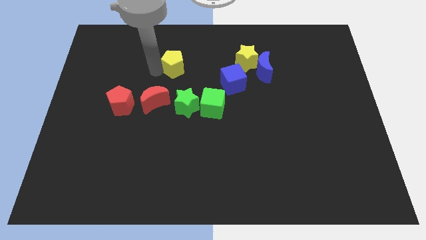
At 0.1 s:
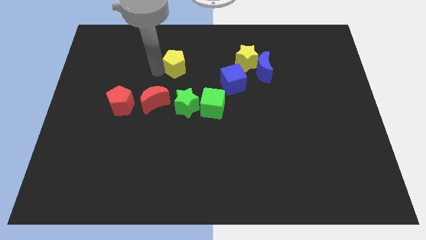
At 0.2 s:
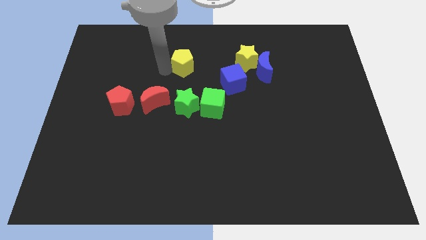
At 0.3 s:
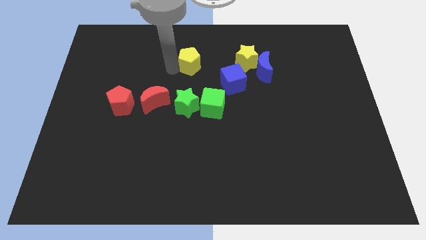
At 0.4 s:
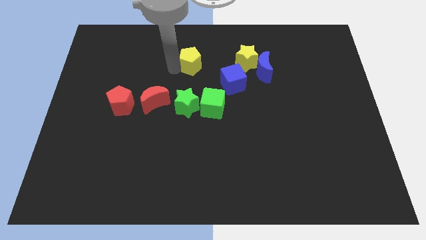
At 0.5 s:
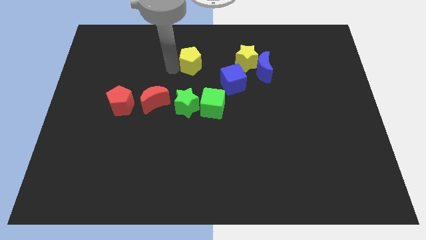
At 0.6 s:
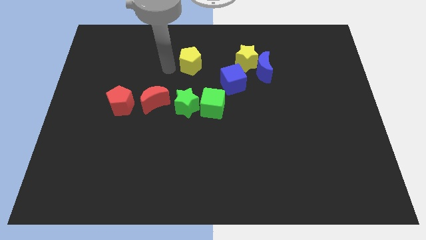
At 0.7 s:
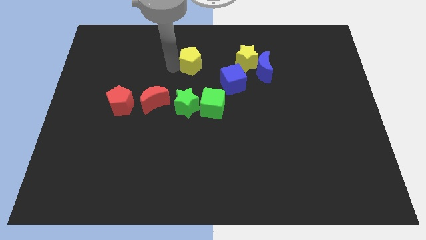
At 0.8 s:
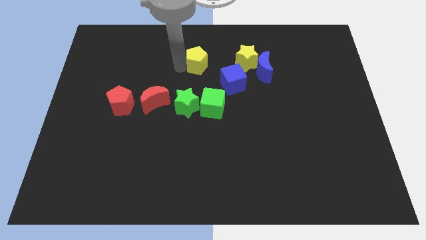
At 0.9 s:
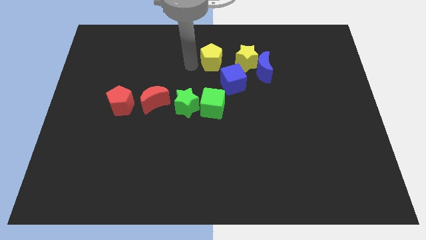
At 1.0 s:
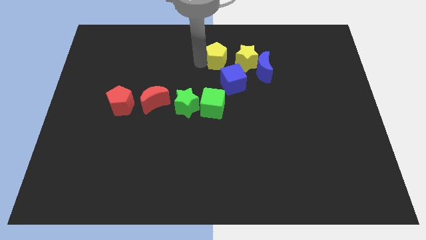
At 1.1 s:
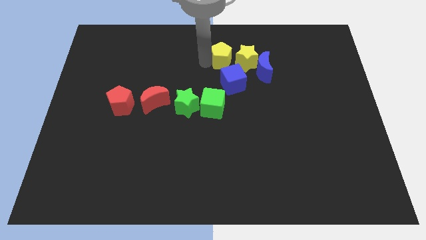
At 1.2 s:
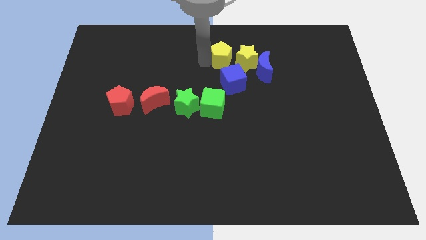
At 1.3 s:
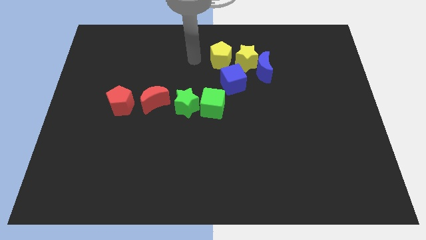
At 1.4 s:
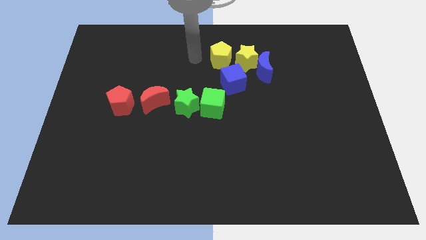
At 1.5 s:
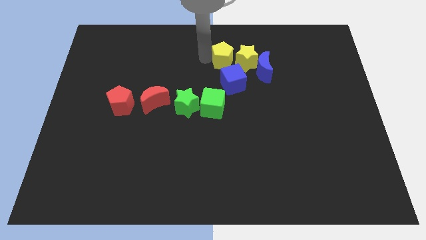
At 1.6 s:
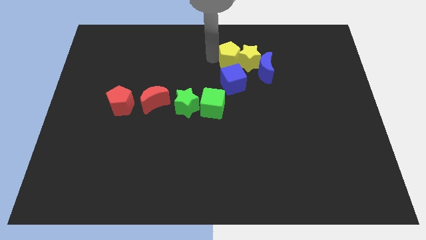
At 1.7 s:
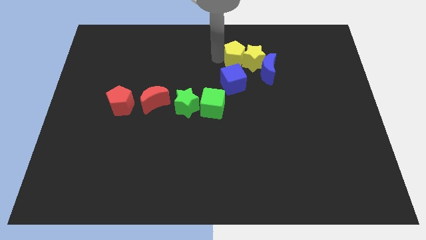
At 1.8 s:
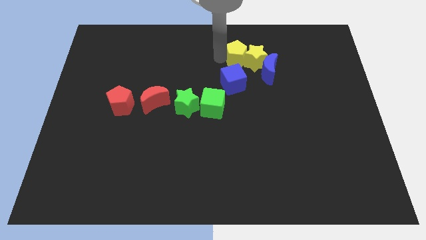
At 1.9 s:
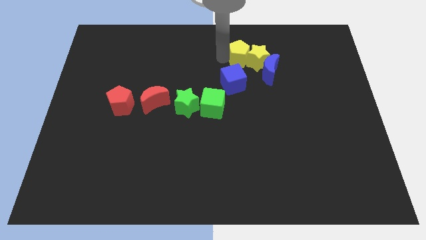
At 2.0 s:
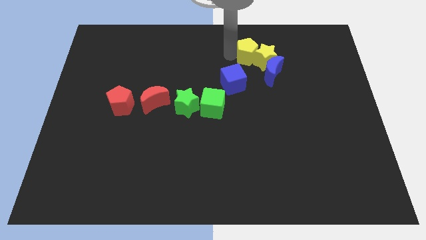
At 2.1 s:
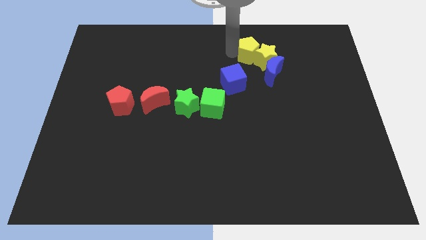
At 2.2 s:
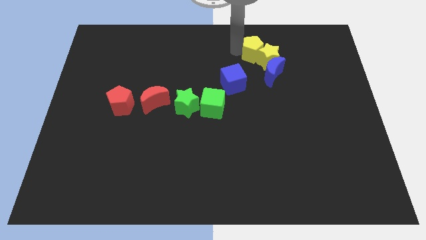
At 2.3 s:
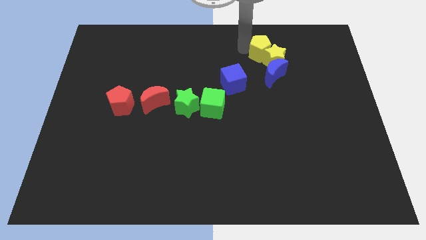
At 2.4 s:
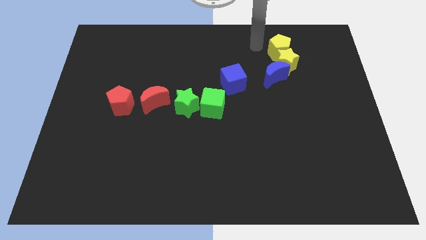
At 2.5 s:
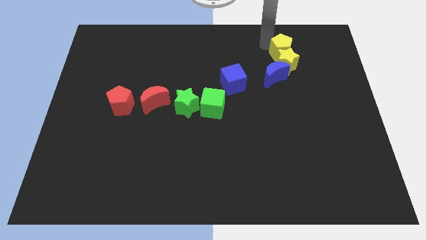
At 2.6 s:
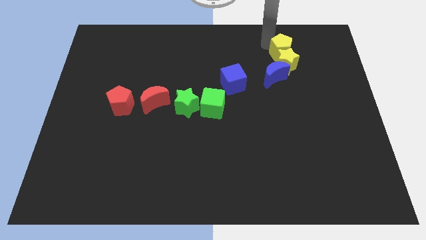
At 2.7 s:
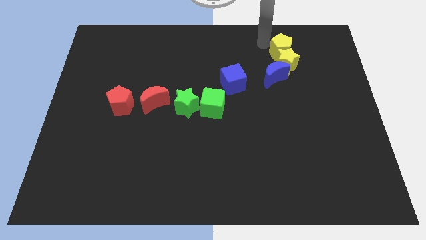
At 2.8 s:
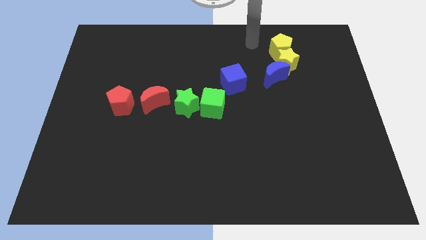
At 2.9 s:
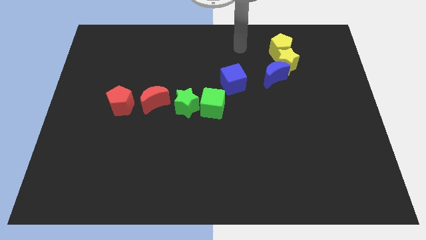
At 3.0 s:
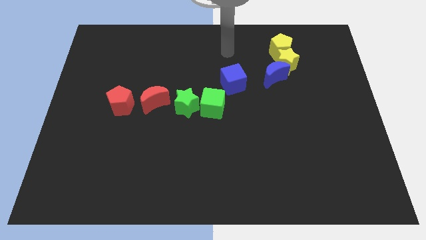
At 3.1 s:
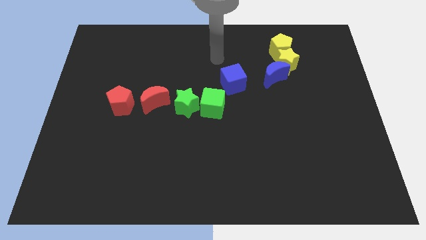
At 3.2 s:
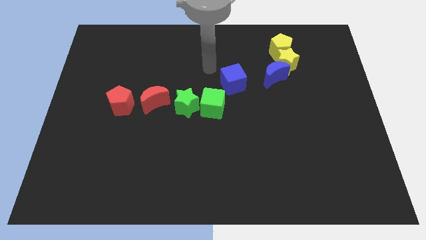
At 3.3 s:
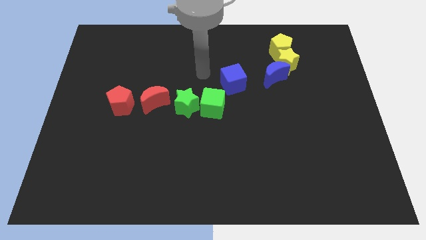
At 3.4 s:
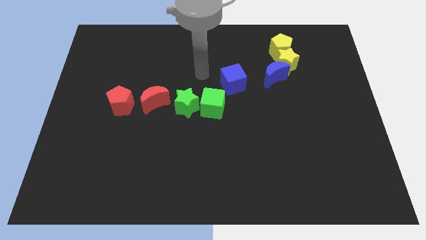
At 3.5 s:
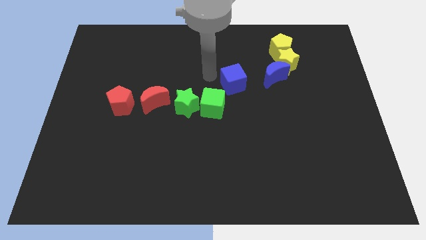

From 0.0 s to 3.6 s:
push the yellow blocks towards the right top of the blue moon

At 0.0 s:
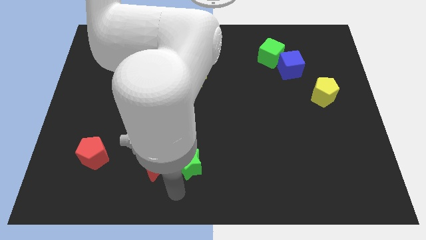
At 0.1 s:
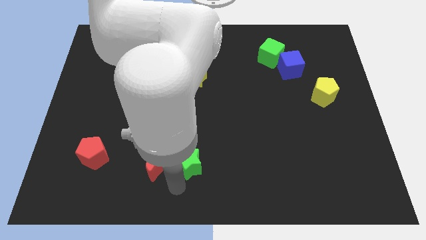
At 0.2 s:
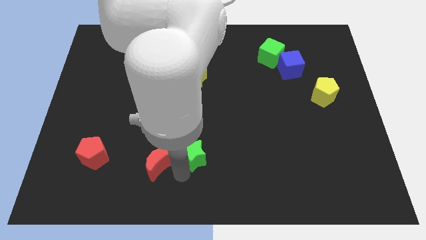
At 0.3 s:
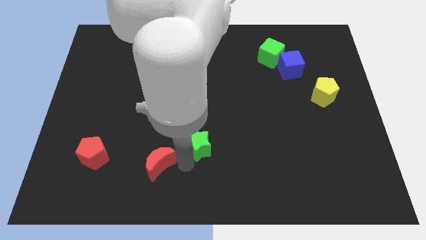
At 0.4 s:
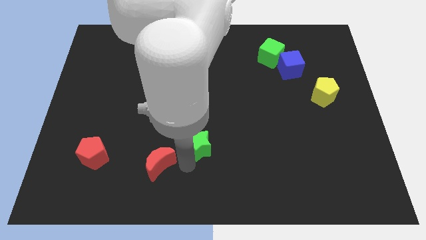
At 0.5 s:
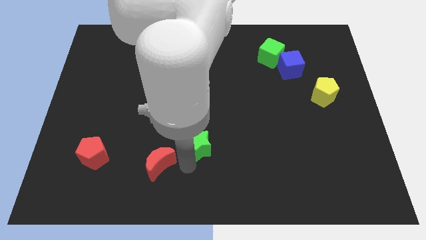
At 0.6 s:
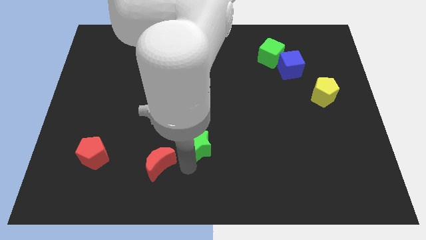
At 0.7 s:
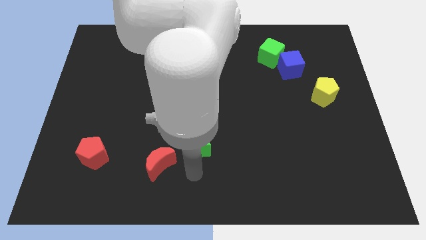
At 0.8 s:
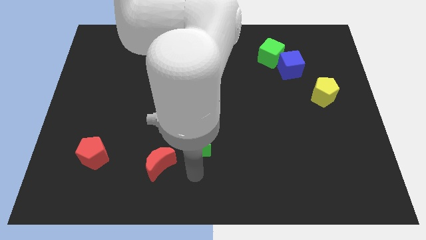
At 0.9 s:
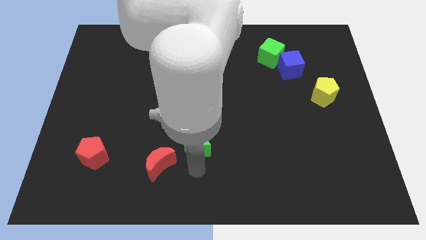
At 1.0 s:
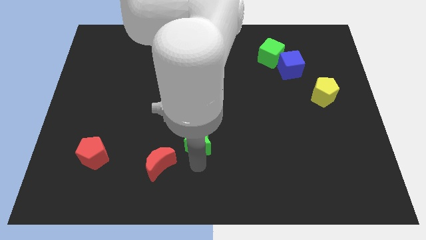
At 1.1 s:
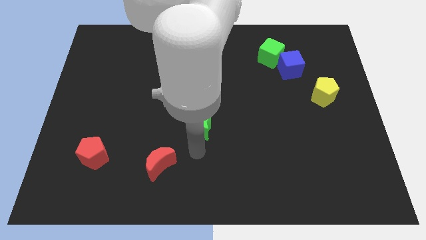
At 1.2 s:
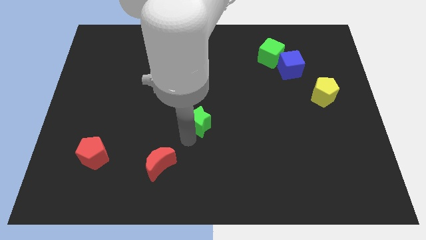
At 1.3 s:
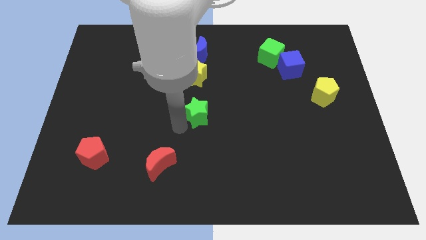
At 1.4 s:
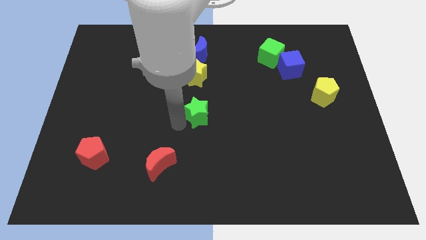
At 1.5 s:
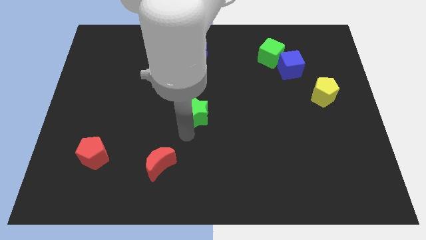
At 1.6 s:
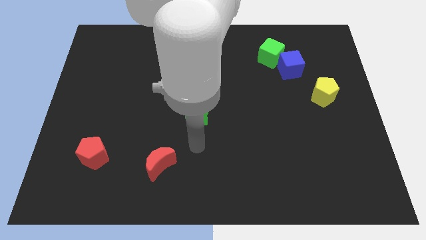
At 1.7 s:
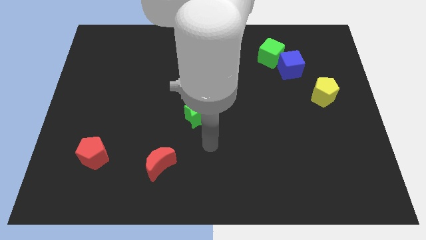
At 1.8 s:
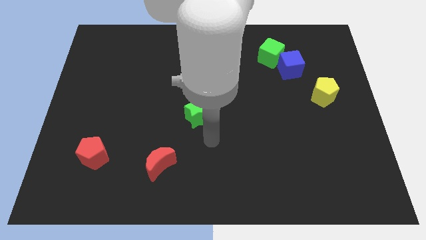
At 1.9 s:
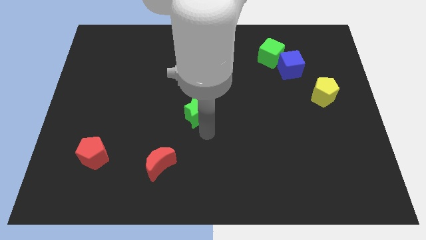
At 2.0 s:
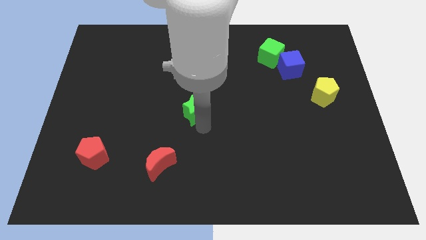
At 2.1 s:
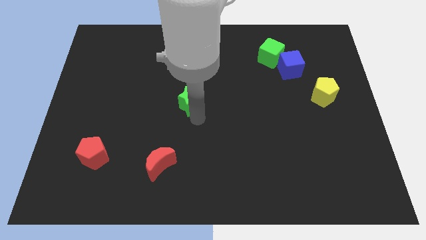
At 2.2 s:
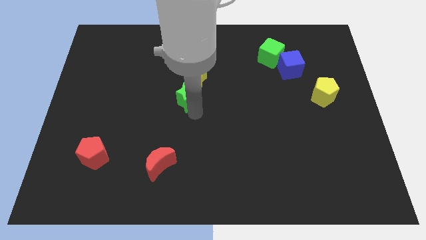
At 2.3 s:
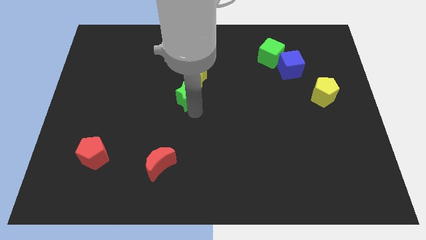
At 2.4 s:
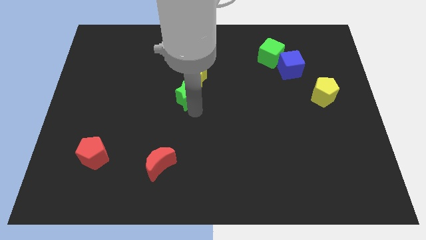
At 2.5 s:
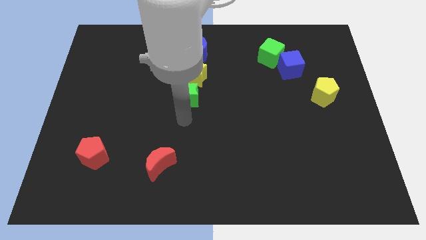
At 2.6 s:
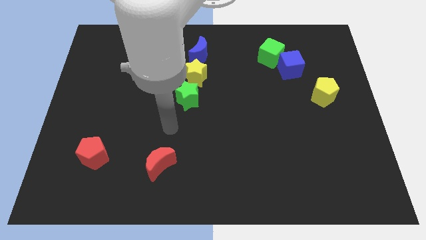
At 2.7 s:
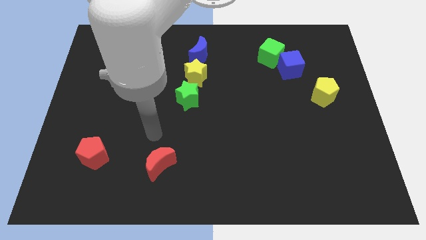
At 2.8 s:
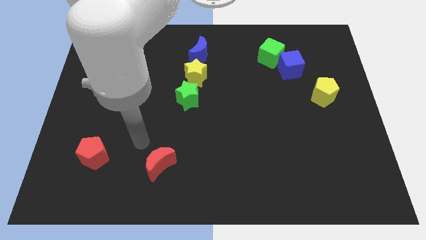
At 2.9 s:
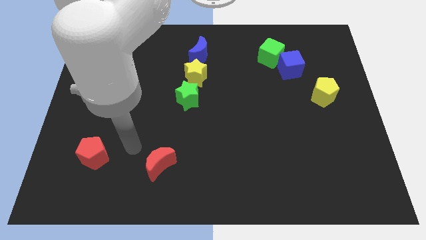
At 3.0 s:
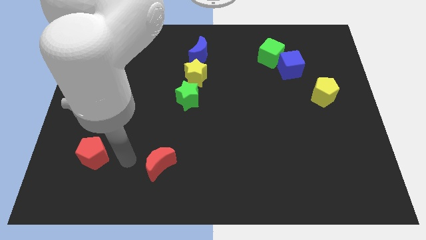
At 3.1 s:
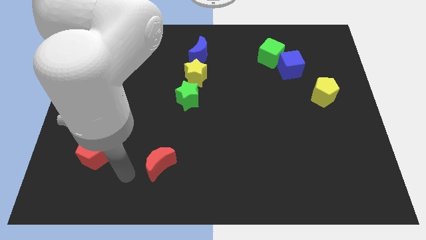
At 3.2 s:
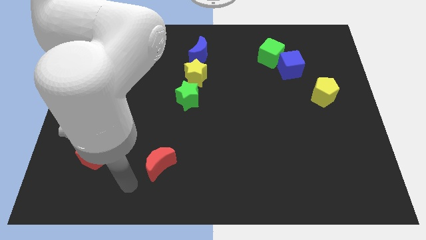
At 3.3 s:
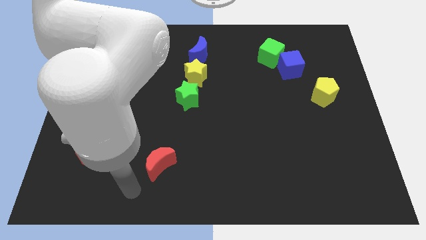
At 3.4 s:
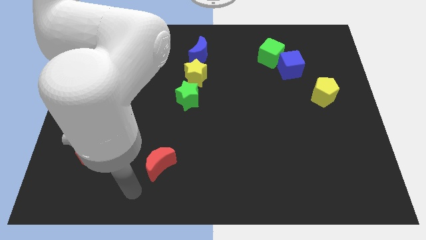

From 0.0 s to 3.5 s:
place the green star below the yellow star

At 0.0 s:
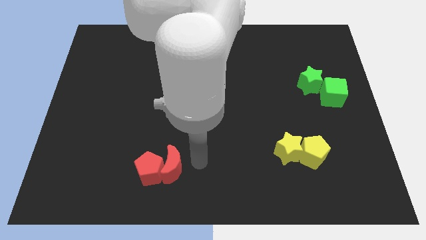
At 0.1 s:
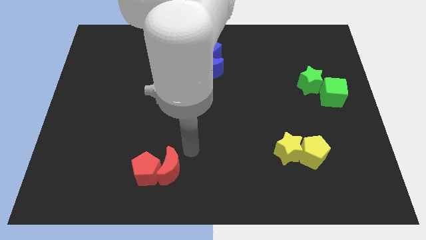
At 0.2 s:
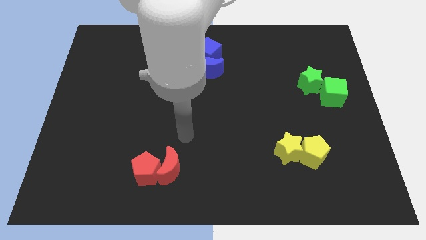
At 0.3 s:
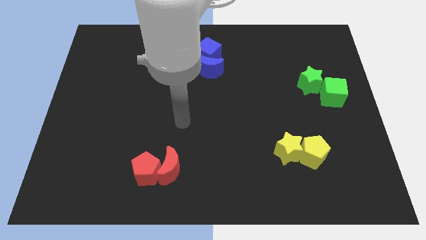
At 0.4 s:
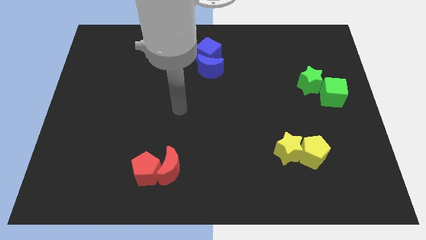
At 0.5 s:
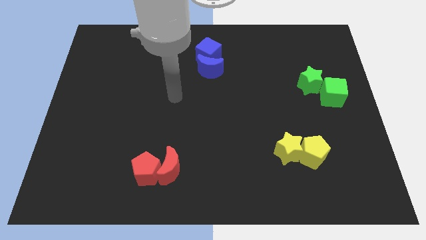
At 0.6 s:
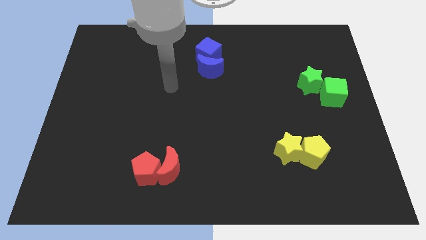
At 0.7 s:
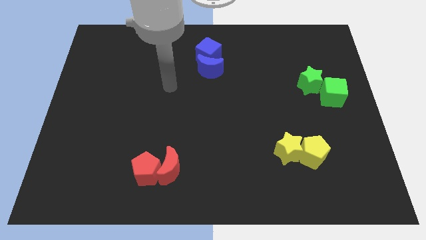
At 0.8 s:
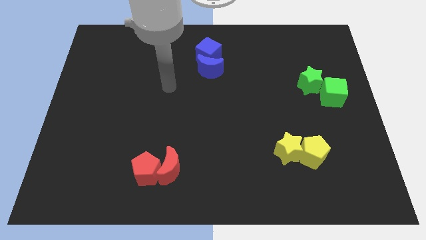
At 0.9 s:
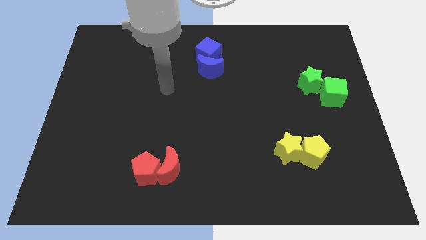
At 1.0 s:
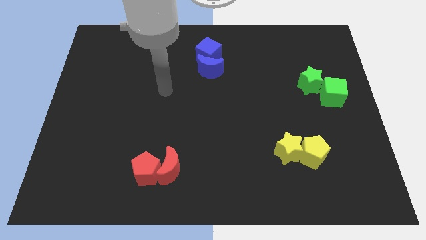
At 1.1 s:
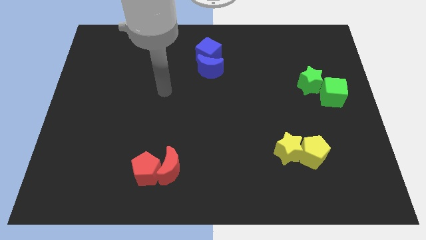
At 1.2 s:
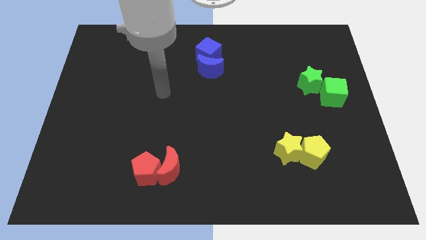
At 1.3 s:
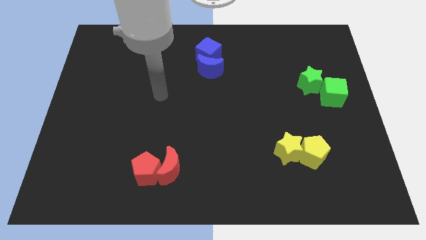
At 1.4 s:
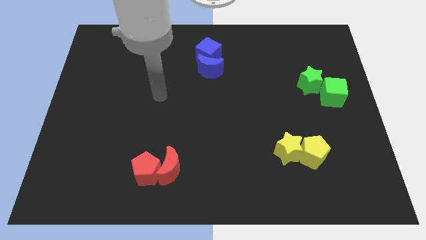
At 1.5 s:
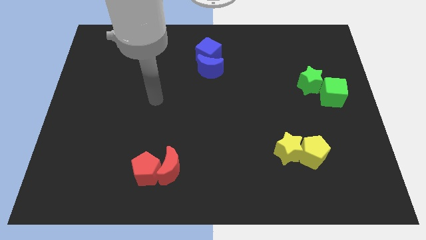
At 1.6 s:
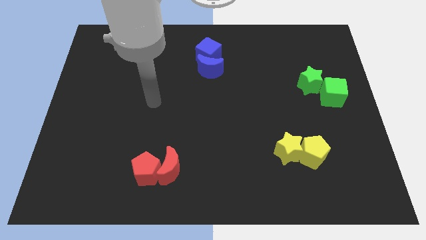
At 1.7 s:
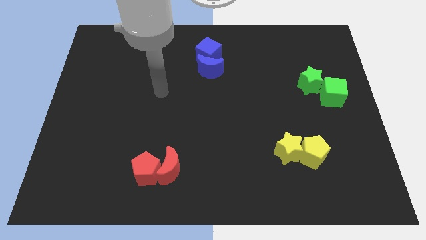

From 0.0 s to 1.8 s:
go and point your hand above the group of red blocks

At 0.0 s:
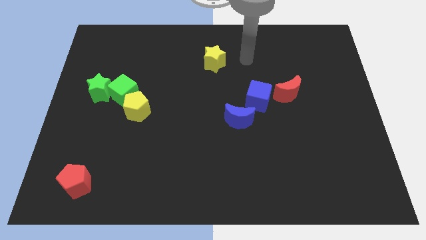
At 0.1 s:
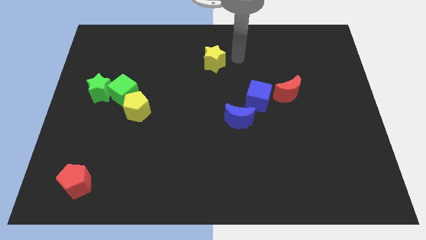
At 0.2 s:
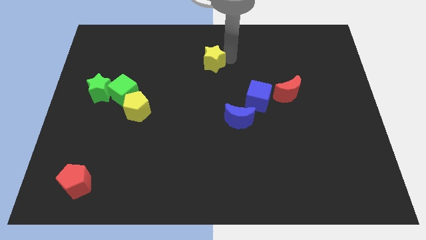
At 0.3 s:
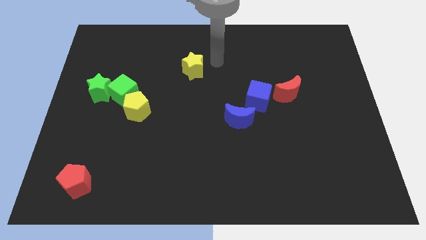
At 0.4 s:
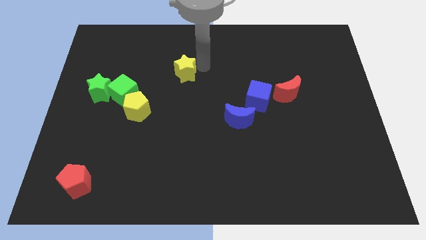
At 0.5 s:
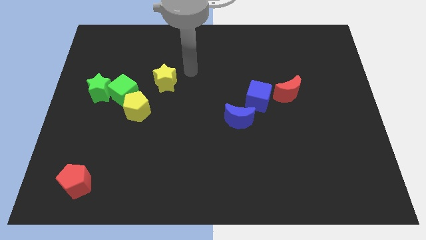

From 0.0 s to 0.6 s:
push the yellow star toward the top of the center of the board
